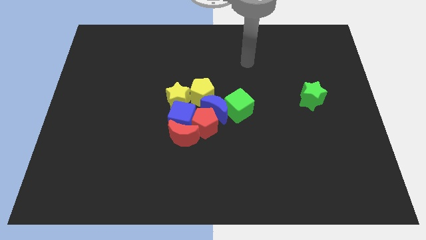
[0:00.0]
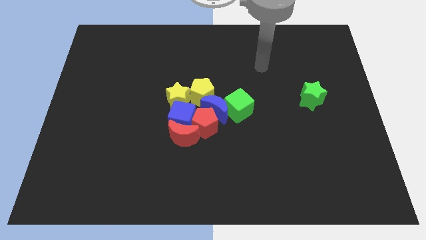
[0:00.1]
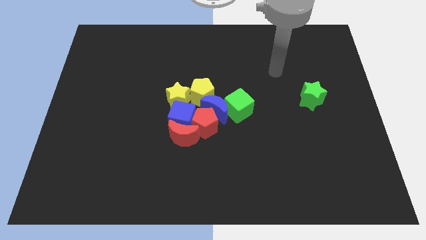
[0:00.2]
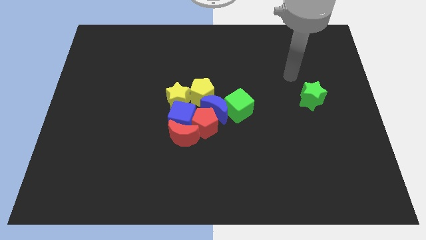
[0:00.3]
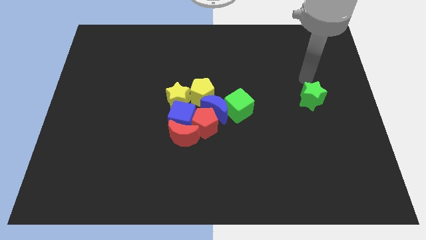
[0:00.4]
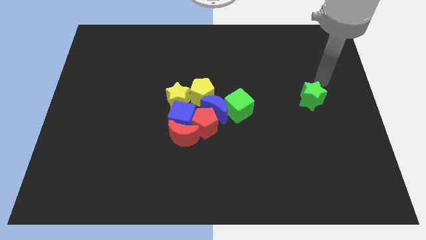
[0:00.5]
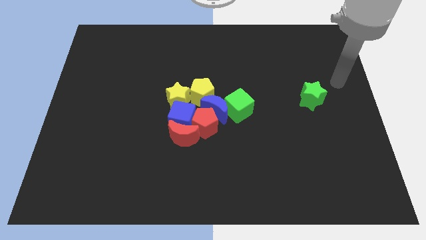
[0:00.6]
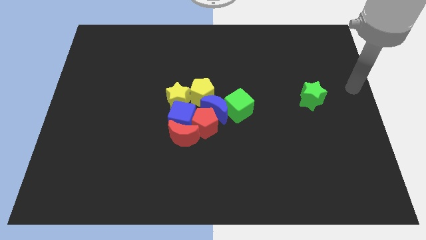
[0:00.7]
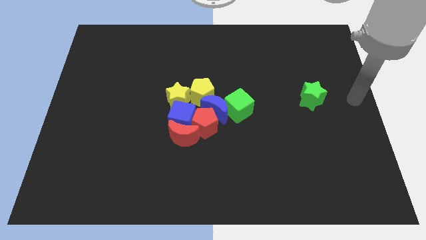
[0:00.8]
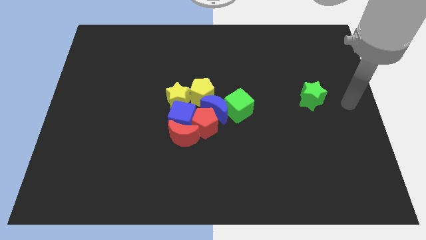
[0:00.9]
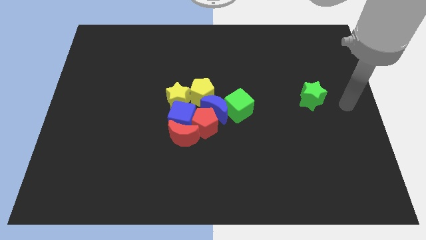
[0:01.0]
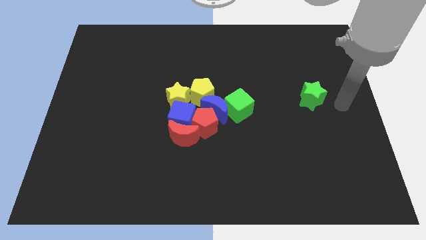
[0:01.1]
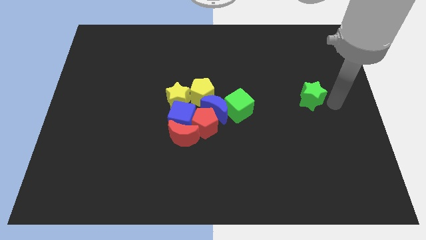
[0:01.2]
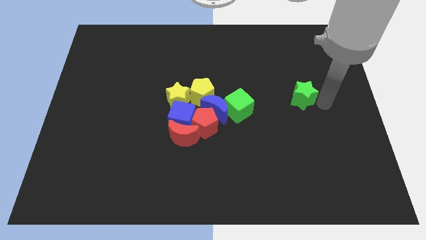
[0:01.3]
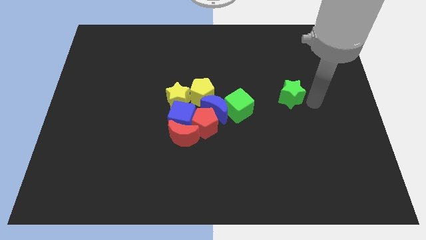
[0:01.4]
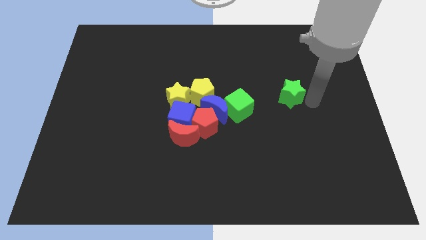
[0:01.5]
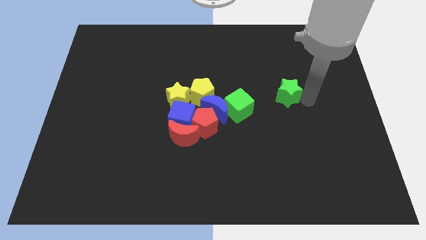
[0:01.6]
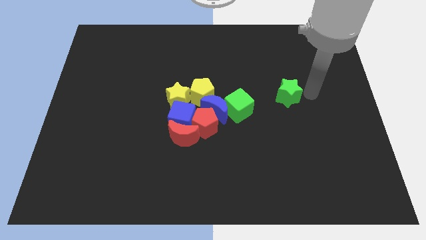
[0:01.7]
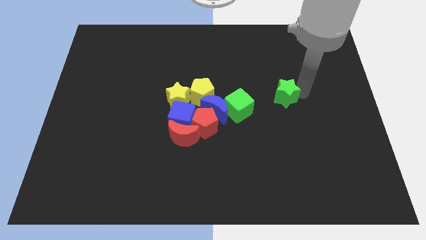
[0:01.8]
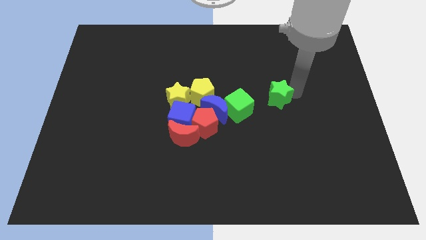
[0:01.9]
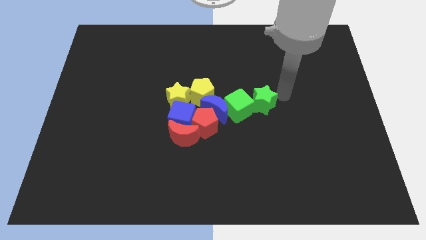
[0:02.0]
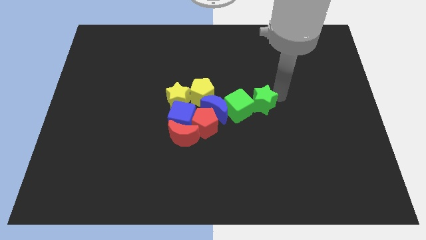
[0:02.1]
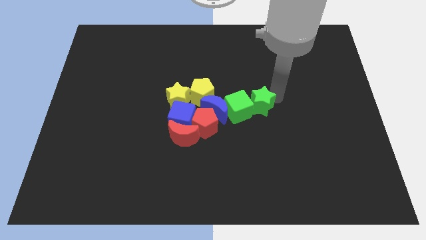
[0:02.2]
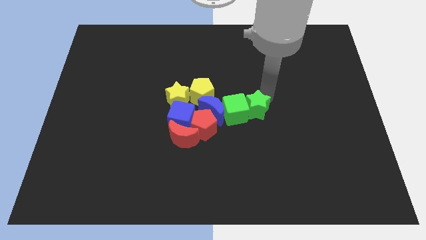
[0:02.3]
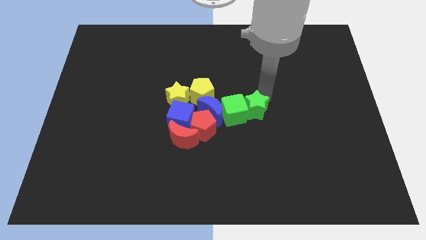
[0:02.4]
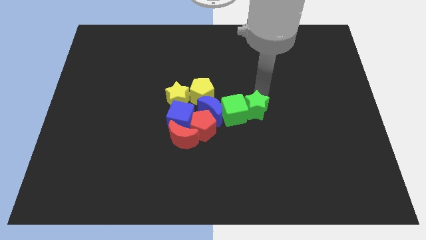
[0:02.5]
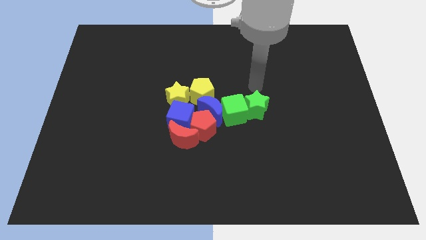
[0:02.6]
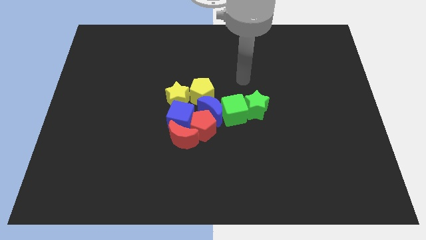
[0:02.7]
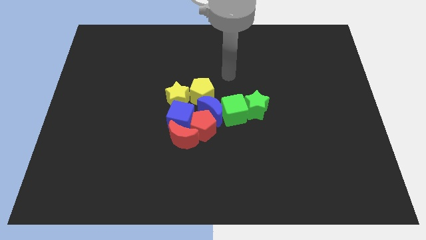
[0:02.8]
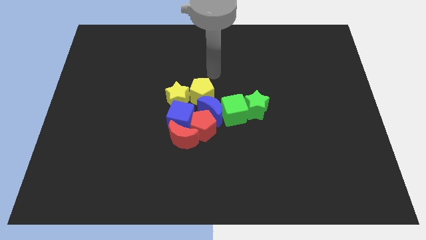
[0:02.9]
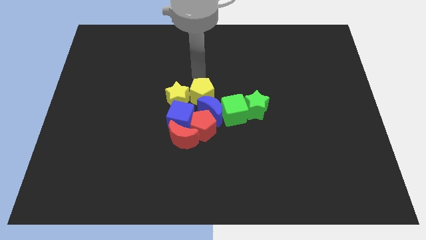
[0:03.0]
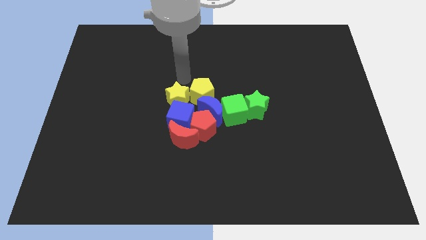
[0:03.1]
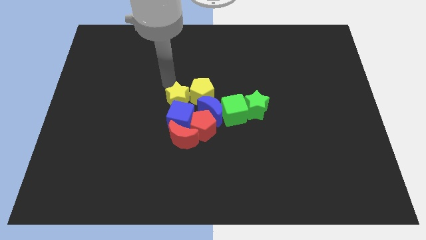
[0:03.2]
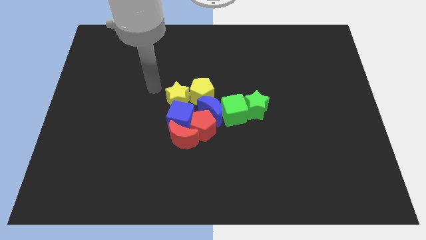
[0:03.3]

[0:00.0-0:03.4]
push the green star to the right of the green cube

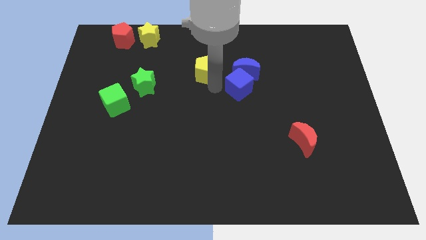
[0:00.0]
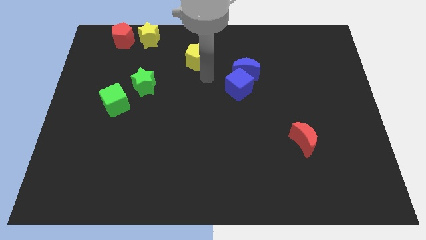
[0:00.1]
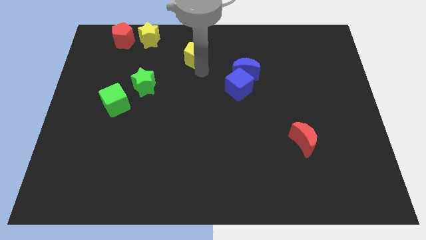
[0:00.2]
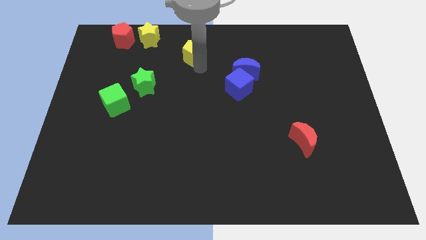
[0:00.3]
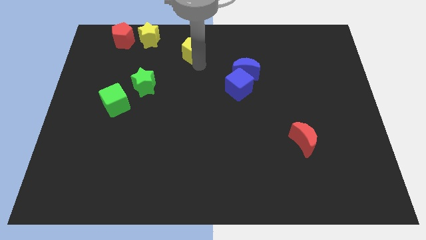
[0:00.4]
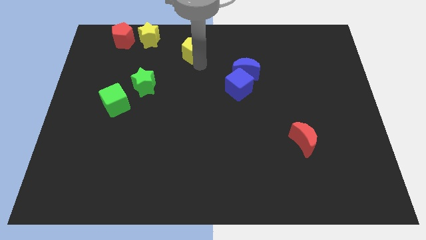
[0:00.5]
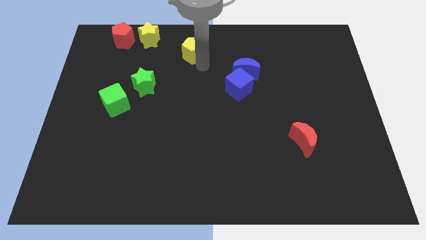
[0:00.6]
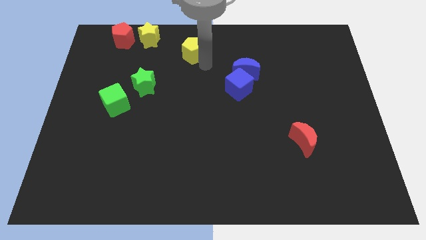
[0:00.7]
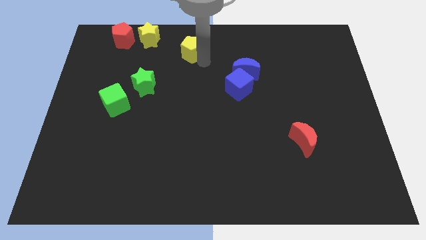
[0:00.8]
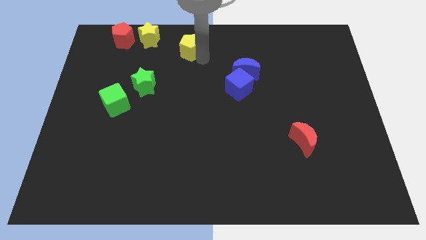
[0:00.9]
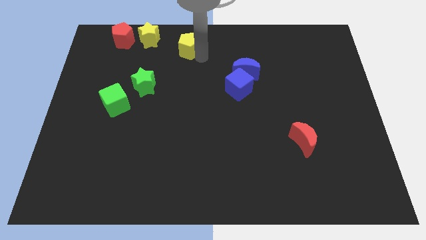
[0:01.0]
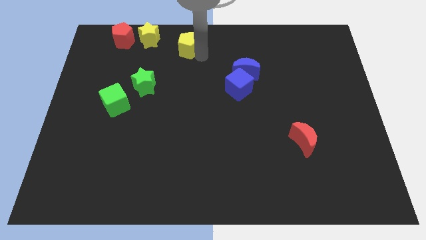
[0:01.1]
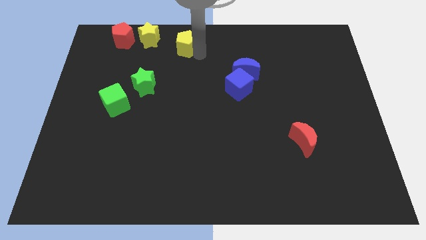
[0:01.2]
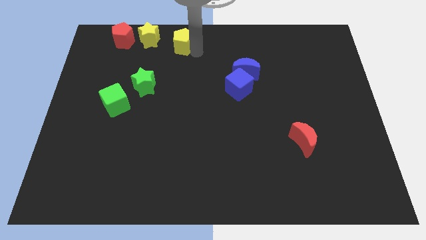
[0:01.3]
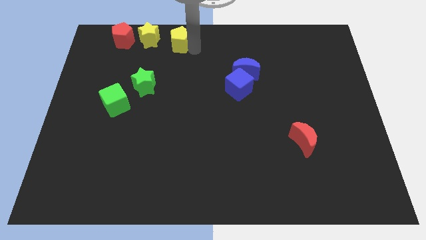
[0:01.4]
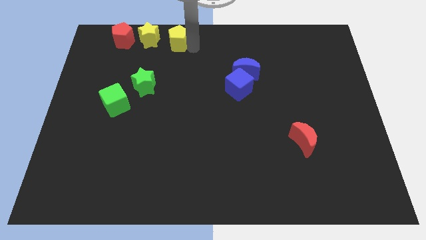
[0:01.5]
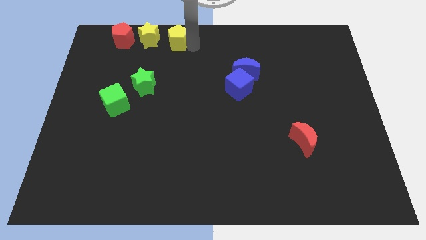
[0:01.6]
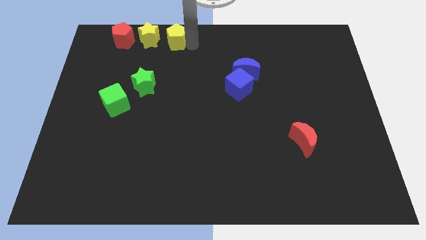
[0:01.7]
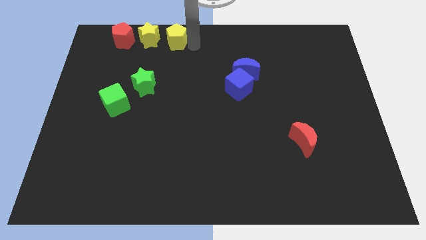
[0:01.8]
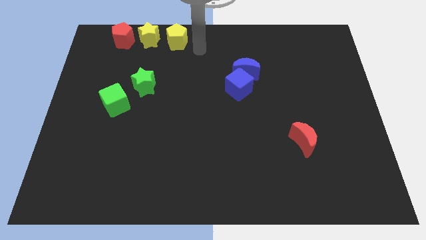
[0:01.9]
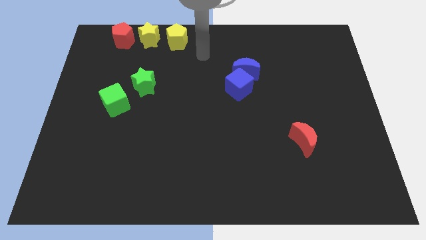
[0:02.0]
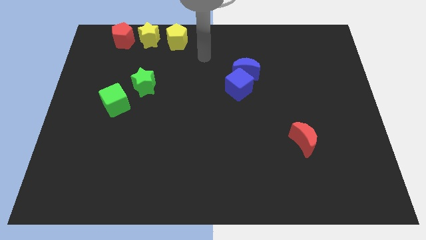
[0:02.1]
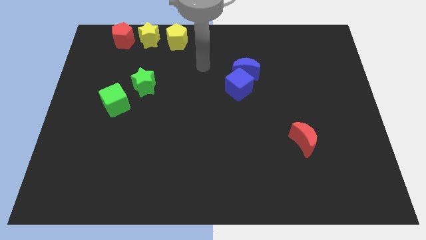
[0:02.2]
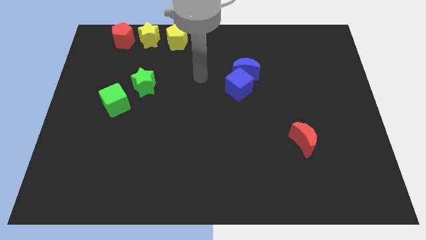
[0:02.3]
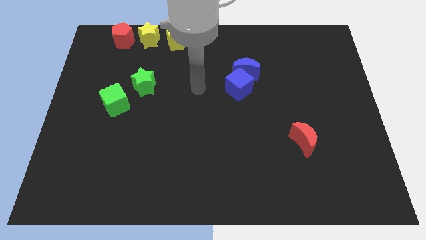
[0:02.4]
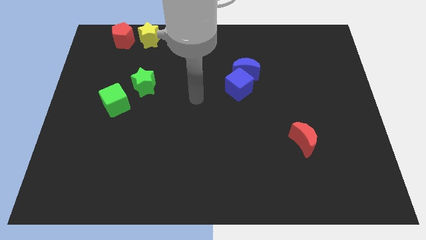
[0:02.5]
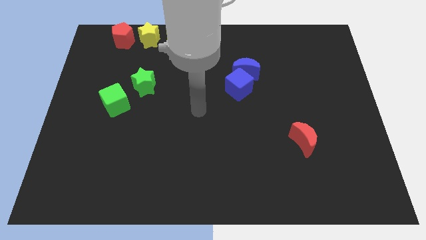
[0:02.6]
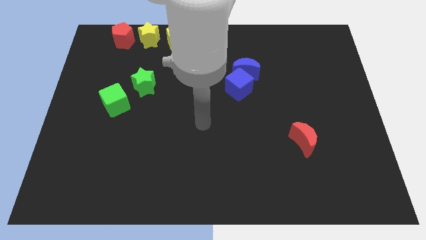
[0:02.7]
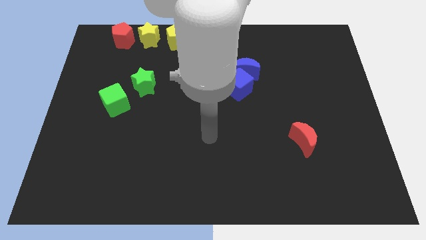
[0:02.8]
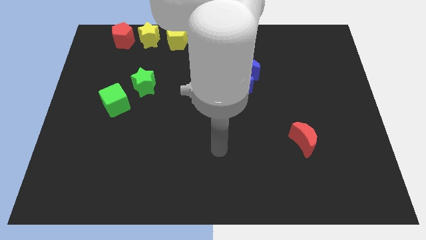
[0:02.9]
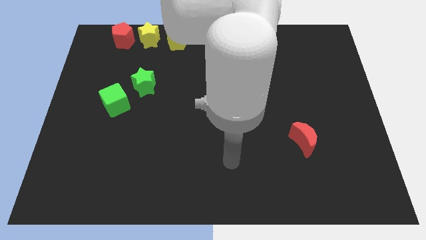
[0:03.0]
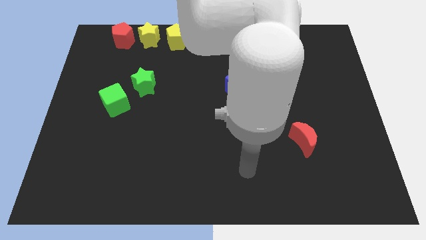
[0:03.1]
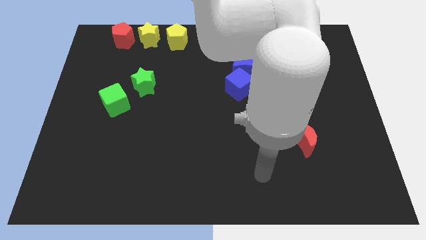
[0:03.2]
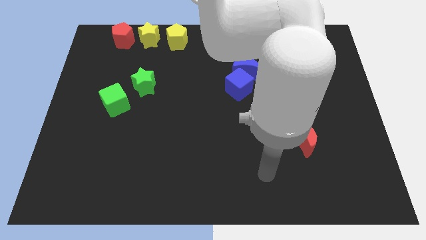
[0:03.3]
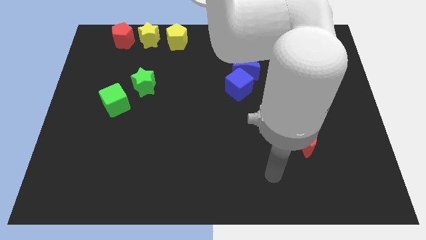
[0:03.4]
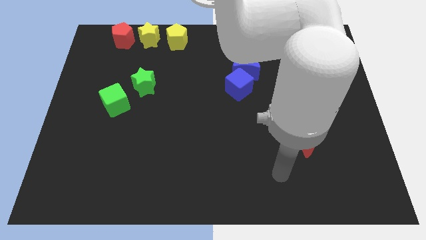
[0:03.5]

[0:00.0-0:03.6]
place the yellow pentagon right to the yellow star
